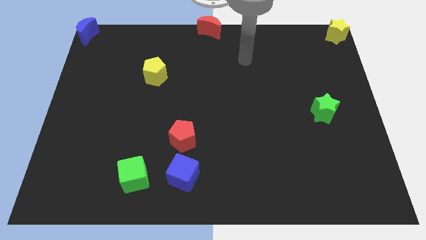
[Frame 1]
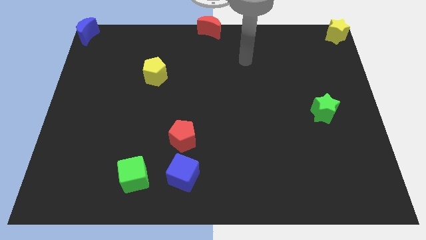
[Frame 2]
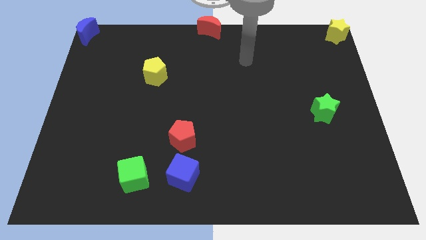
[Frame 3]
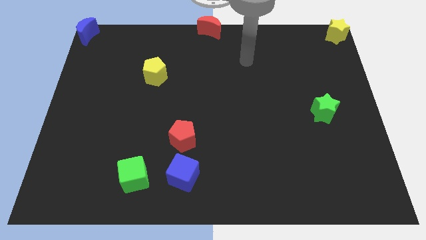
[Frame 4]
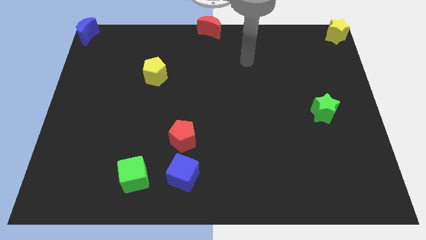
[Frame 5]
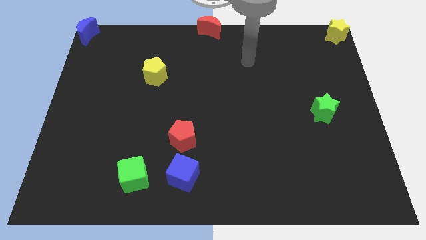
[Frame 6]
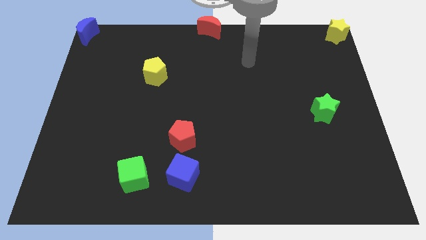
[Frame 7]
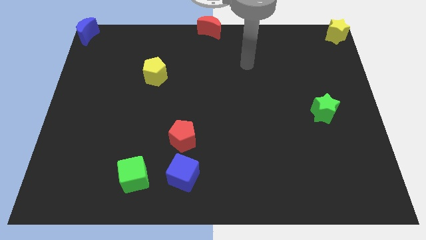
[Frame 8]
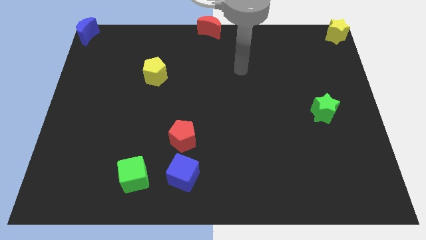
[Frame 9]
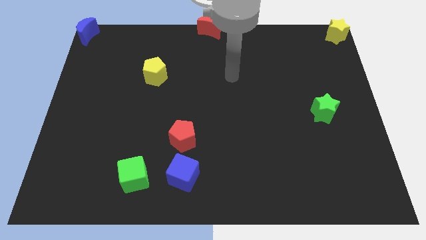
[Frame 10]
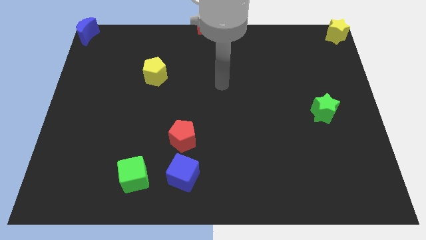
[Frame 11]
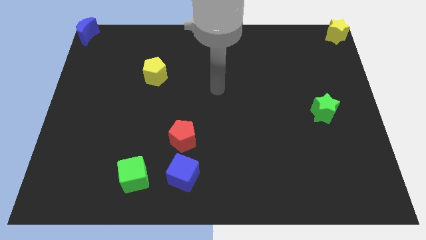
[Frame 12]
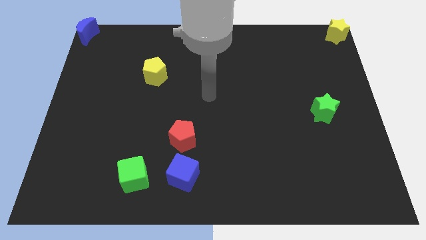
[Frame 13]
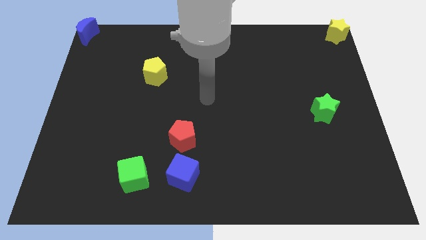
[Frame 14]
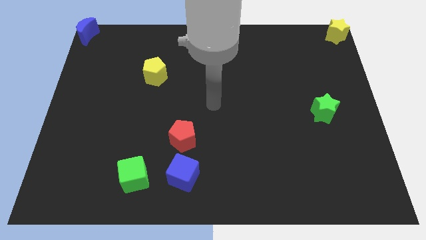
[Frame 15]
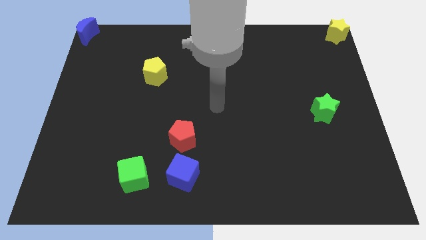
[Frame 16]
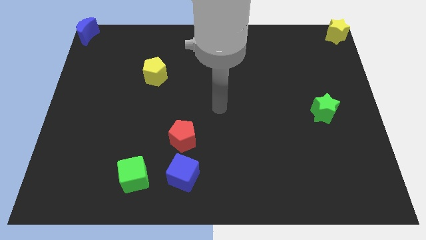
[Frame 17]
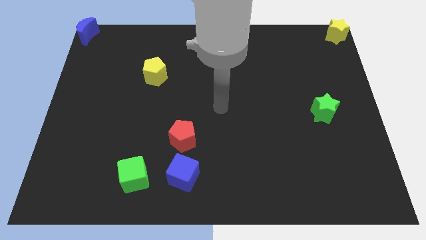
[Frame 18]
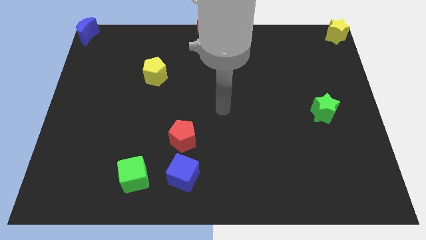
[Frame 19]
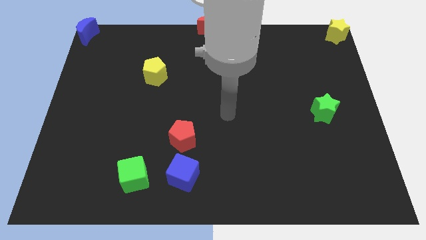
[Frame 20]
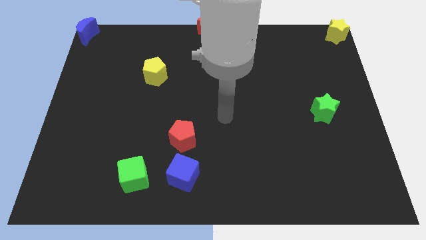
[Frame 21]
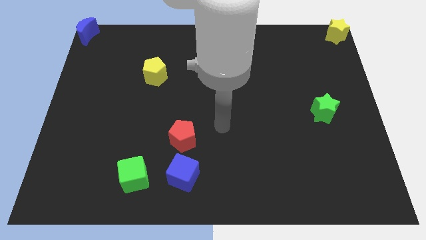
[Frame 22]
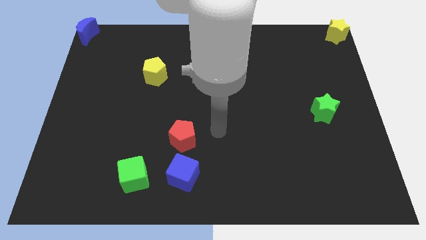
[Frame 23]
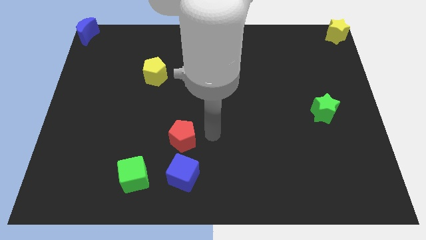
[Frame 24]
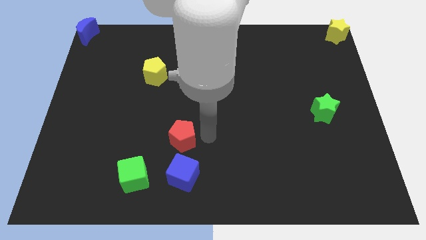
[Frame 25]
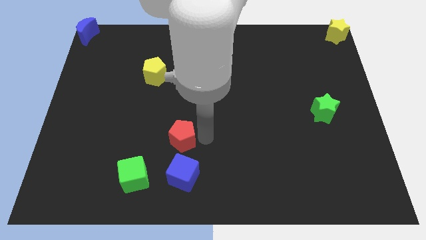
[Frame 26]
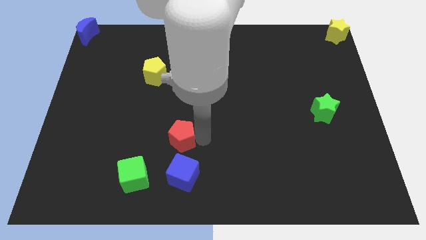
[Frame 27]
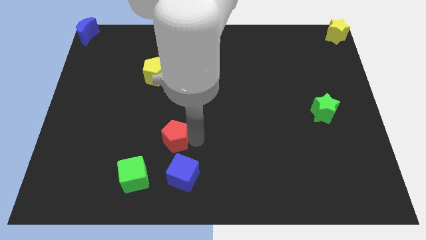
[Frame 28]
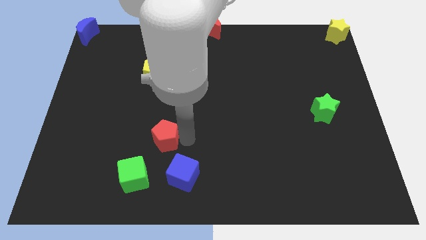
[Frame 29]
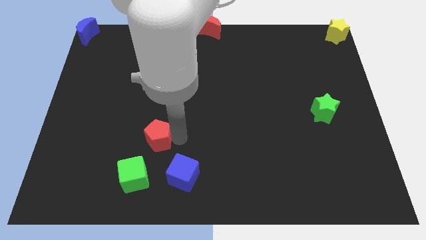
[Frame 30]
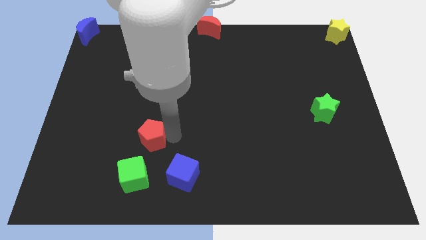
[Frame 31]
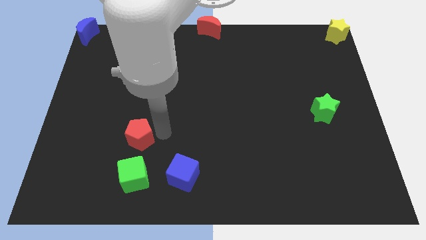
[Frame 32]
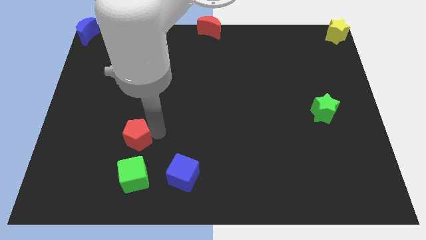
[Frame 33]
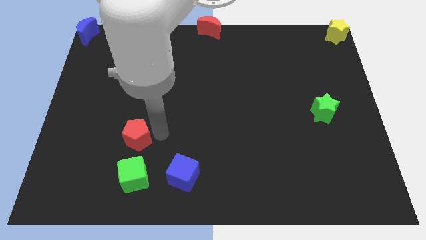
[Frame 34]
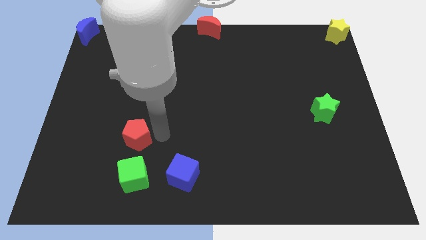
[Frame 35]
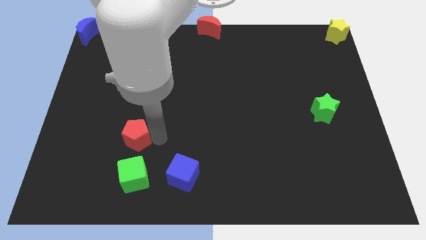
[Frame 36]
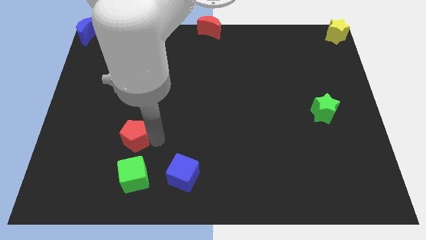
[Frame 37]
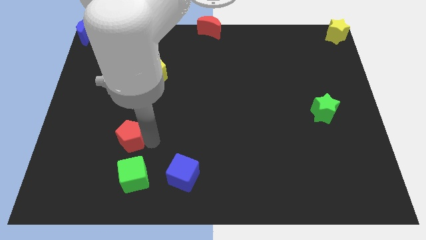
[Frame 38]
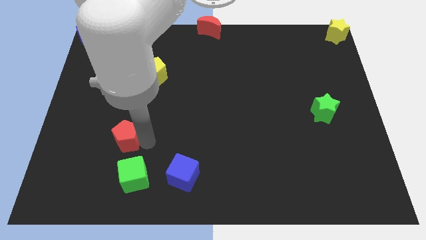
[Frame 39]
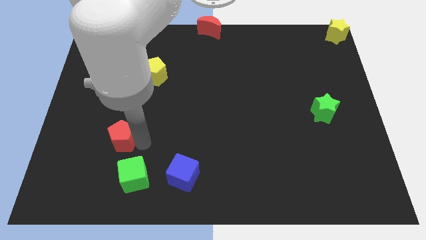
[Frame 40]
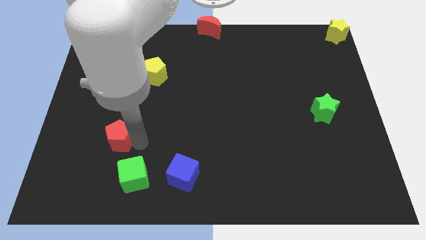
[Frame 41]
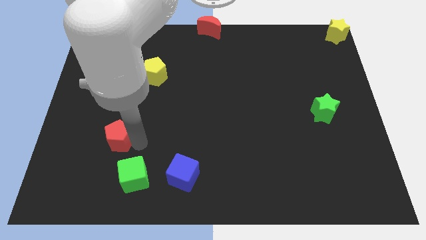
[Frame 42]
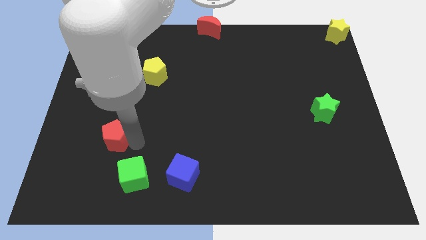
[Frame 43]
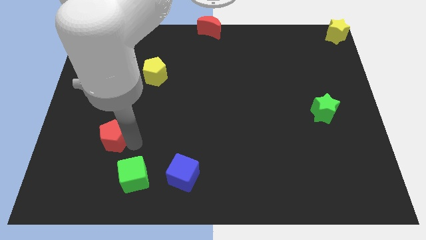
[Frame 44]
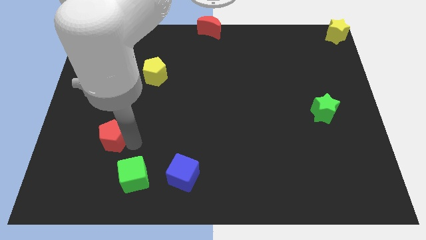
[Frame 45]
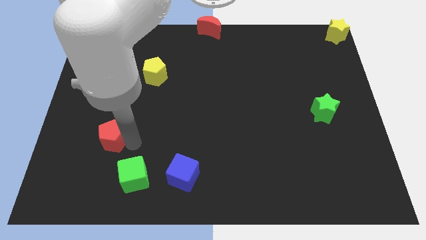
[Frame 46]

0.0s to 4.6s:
drag the red pentagon away from the blue cube

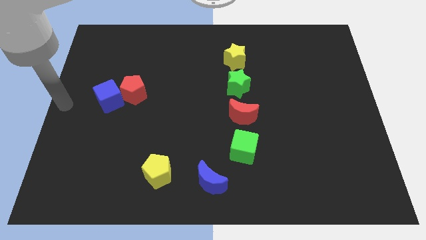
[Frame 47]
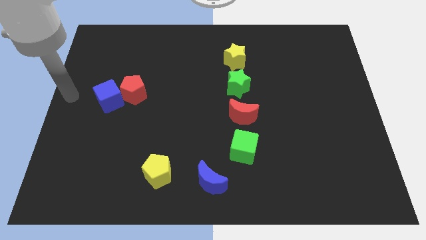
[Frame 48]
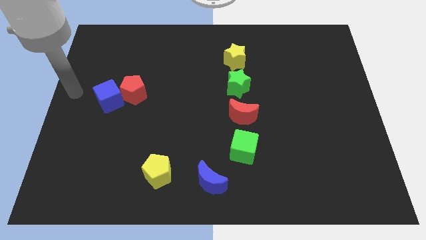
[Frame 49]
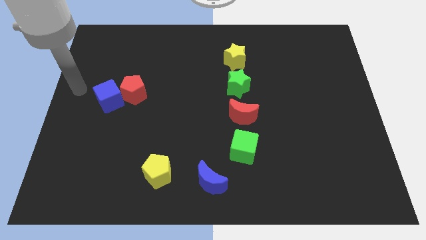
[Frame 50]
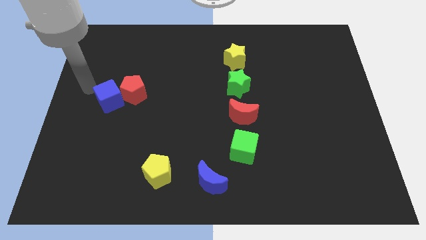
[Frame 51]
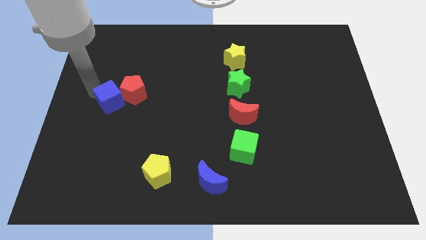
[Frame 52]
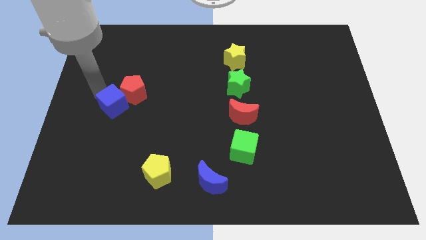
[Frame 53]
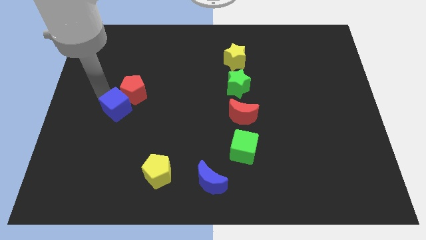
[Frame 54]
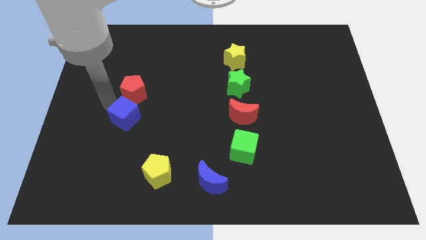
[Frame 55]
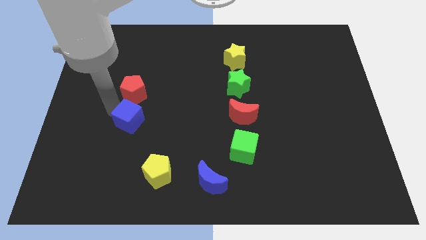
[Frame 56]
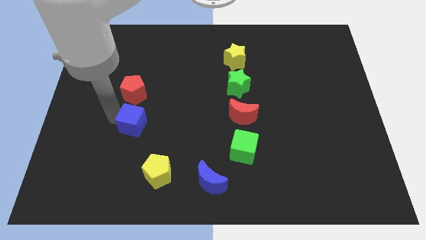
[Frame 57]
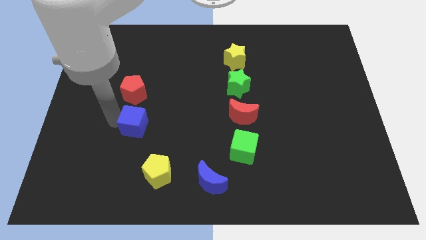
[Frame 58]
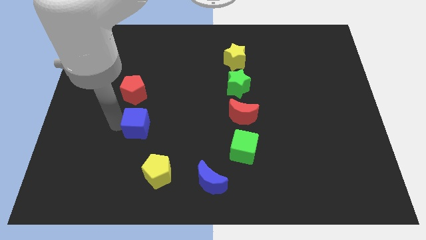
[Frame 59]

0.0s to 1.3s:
move the blue cube away from the red pentagon

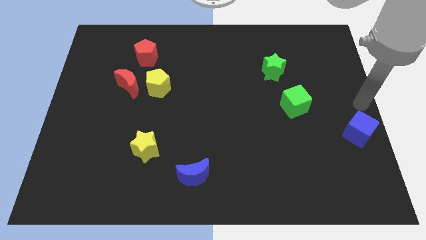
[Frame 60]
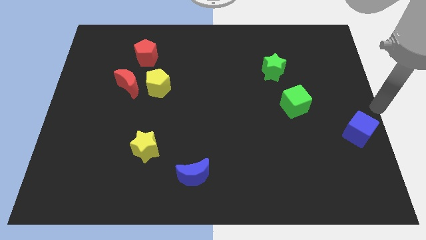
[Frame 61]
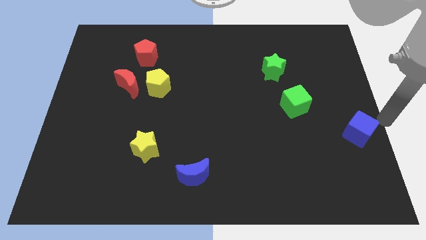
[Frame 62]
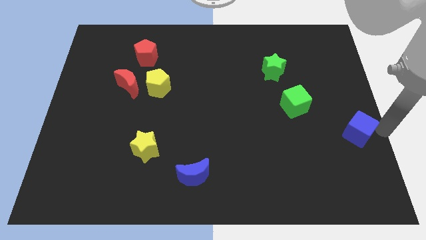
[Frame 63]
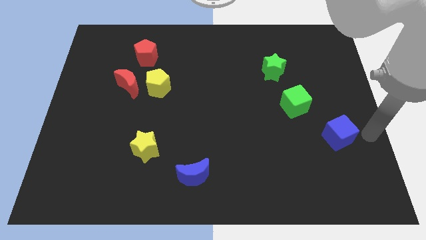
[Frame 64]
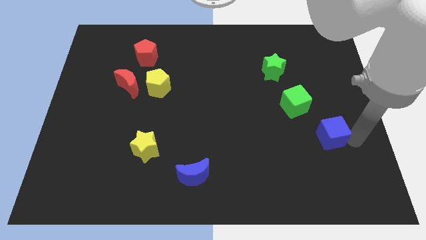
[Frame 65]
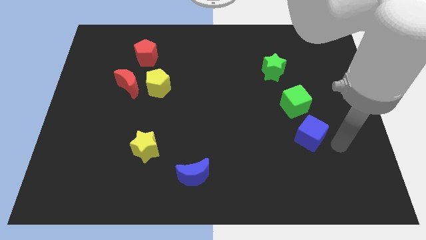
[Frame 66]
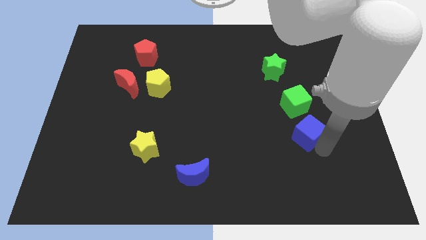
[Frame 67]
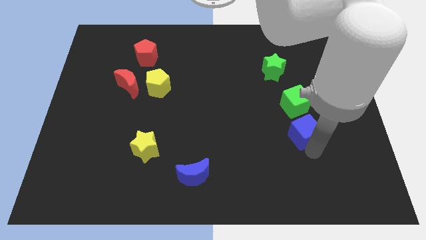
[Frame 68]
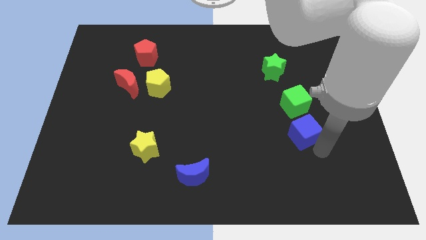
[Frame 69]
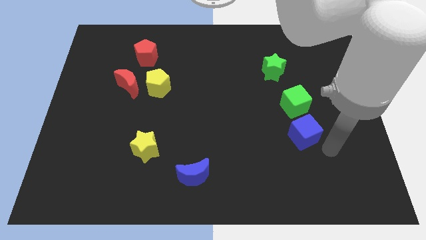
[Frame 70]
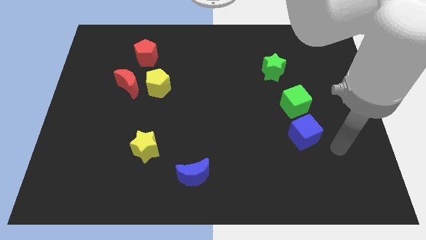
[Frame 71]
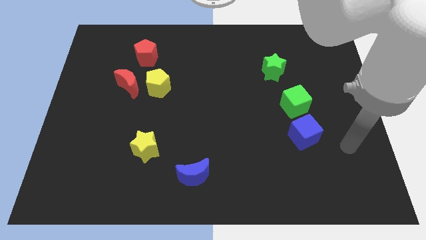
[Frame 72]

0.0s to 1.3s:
push the blue cube to the bottom side of the green cube

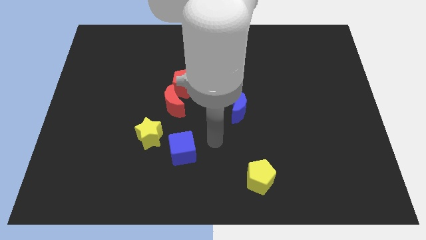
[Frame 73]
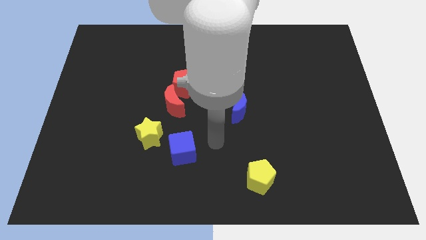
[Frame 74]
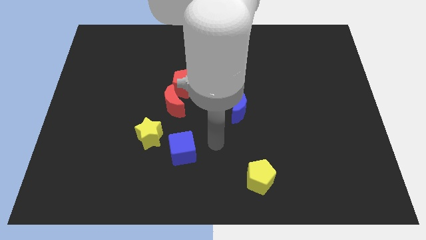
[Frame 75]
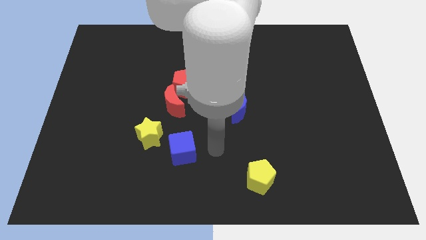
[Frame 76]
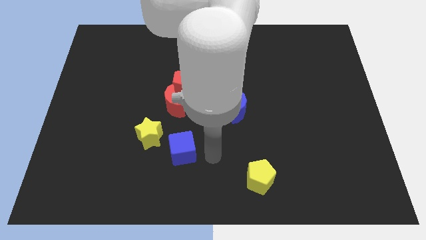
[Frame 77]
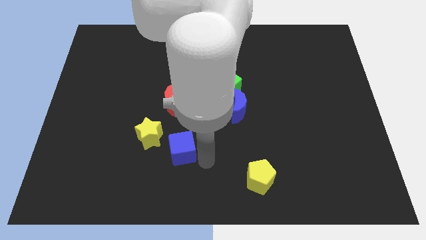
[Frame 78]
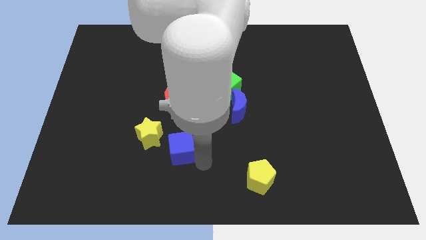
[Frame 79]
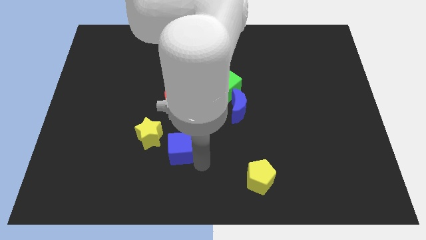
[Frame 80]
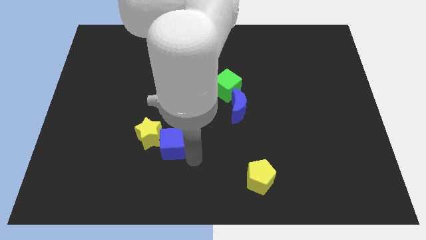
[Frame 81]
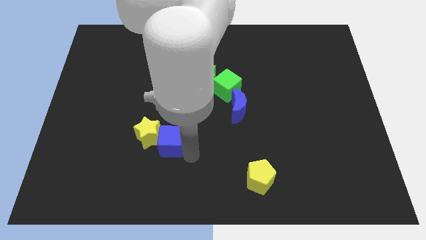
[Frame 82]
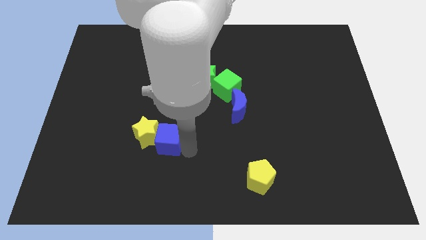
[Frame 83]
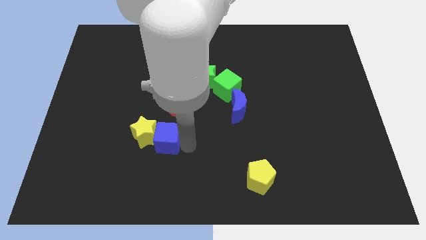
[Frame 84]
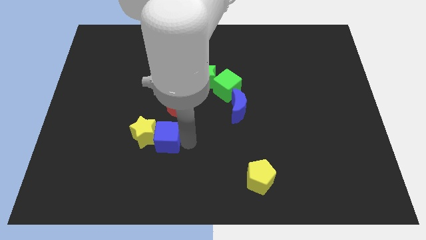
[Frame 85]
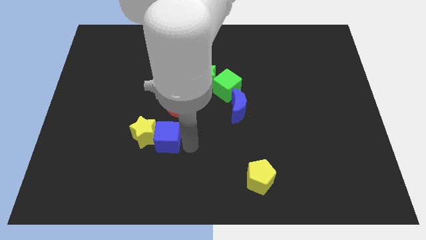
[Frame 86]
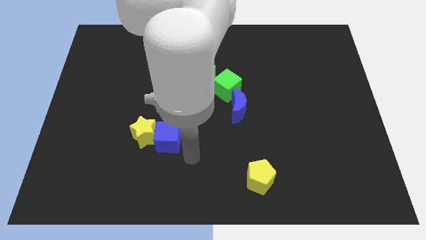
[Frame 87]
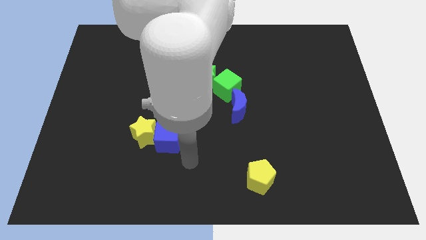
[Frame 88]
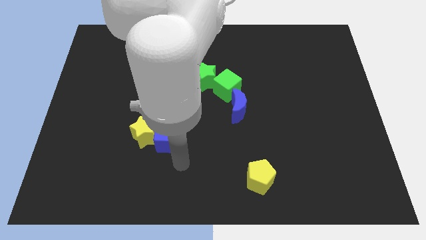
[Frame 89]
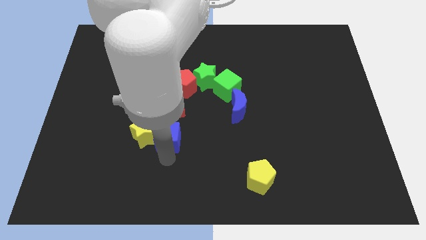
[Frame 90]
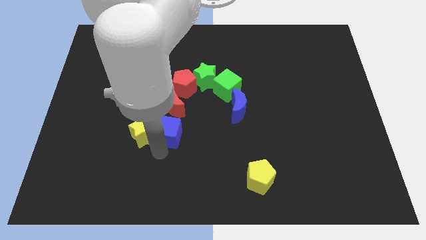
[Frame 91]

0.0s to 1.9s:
push the blue cube into the yellow star
